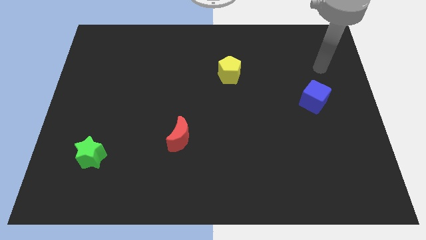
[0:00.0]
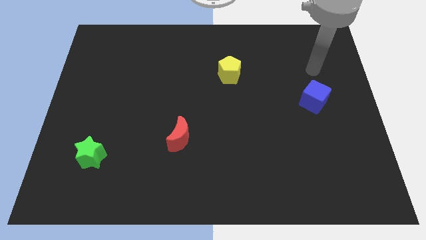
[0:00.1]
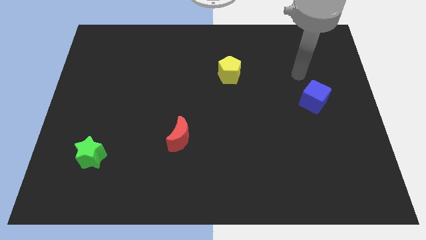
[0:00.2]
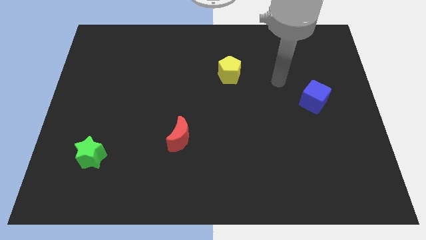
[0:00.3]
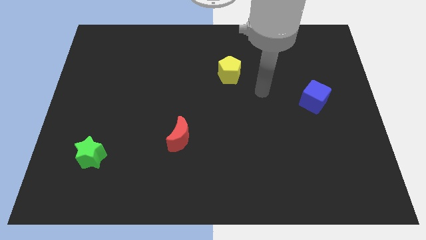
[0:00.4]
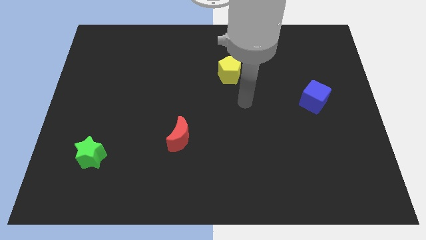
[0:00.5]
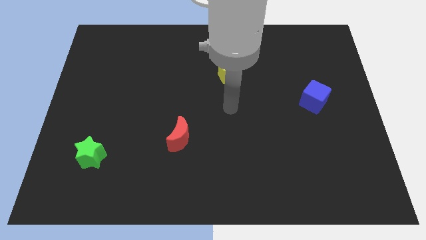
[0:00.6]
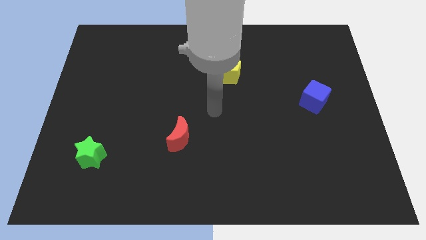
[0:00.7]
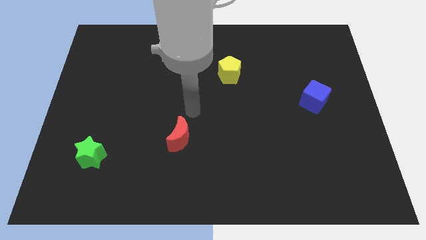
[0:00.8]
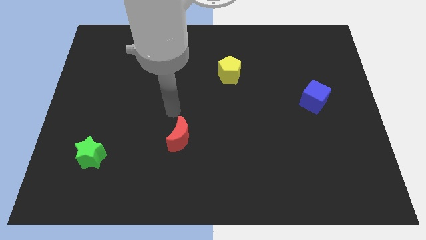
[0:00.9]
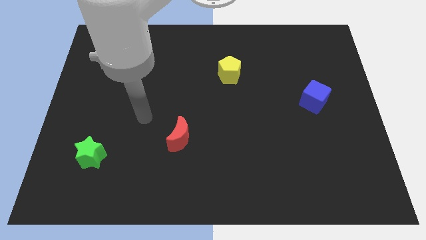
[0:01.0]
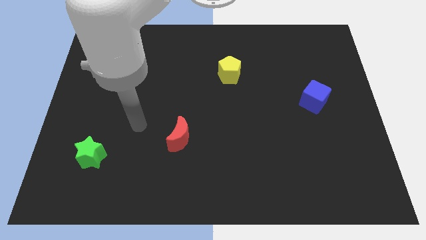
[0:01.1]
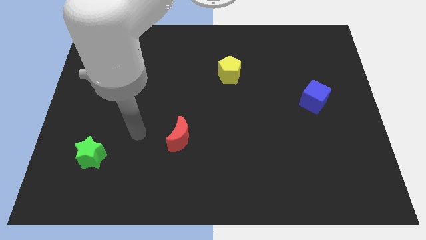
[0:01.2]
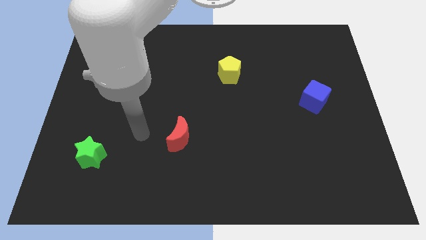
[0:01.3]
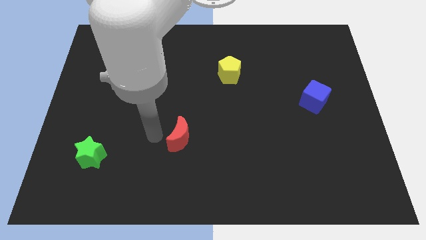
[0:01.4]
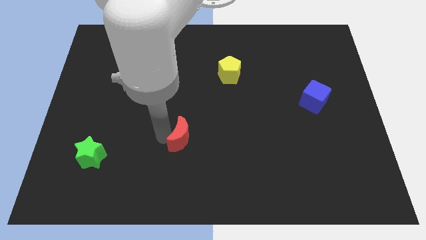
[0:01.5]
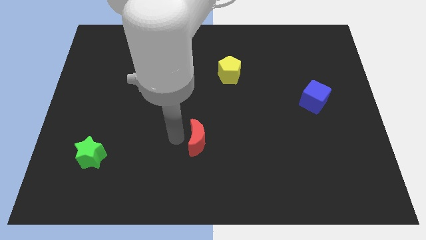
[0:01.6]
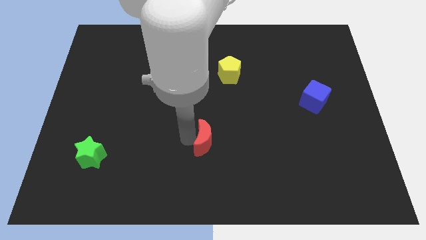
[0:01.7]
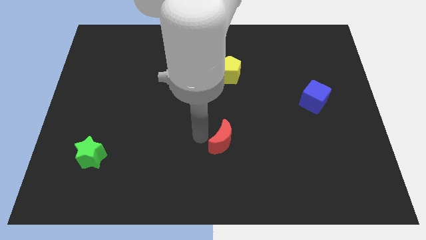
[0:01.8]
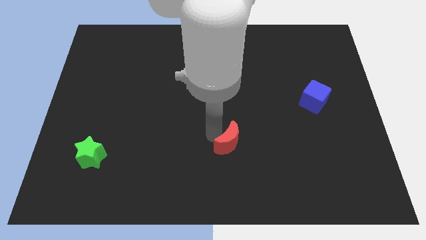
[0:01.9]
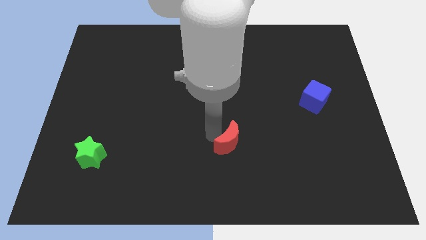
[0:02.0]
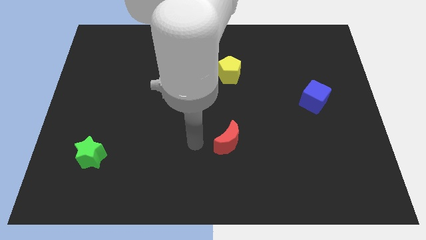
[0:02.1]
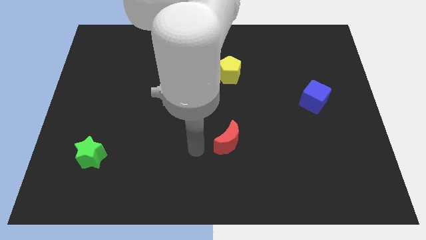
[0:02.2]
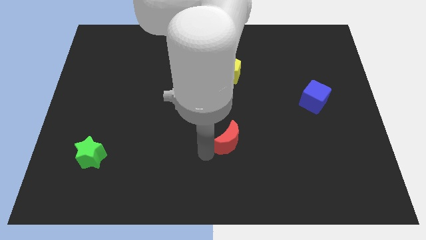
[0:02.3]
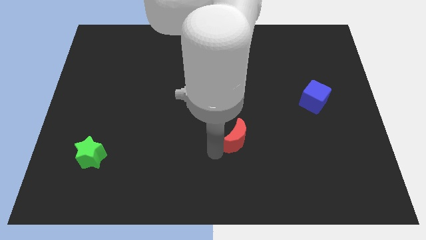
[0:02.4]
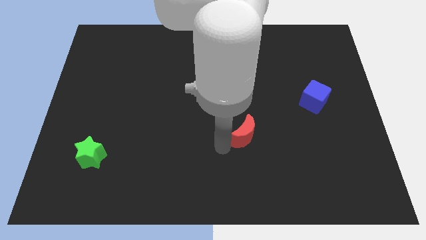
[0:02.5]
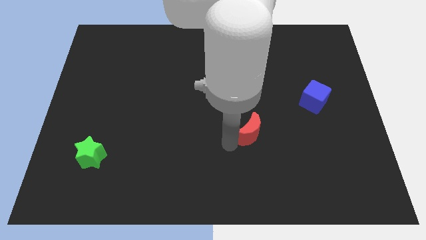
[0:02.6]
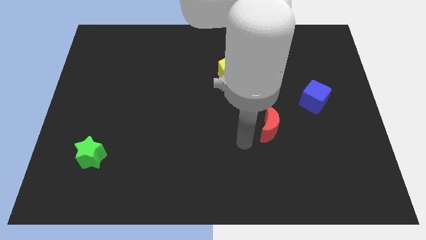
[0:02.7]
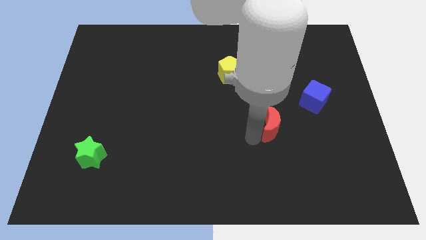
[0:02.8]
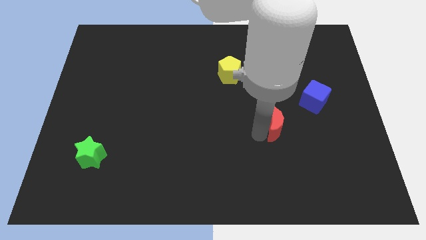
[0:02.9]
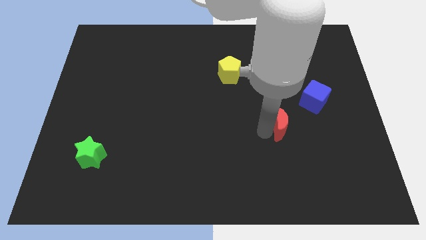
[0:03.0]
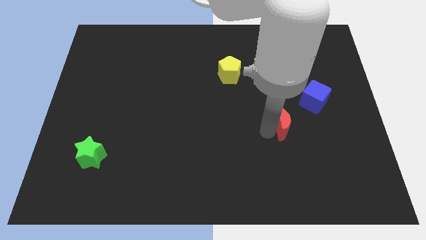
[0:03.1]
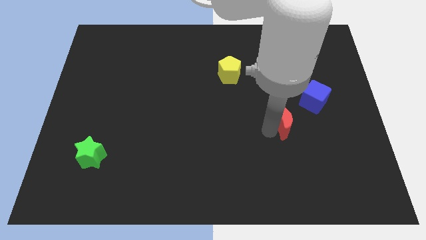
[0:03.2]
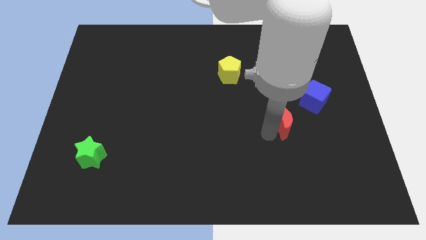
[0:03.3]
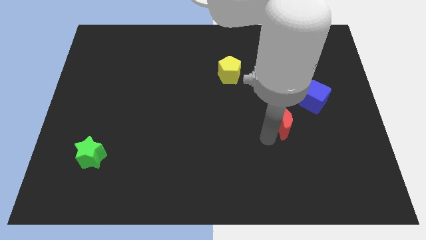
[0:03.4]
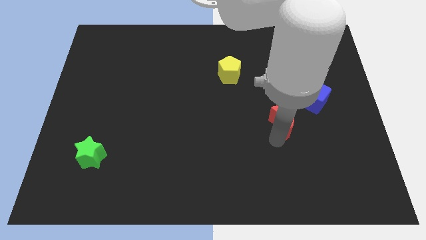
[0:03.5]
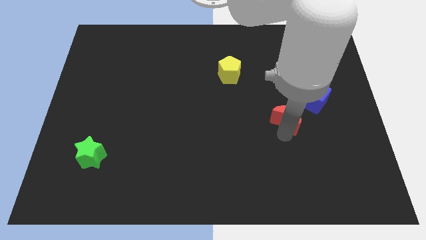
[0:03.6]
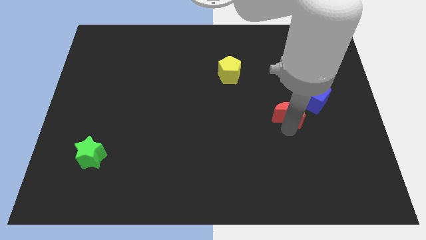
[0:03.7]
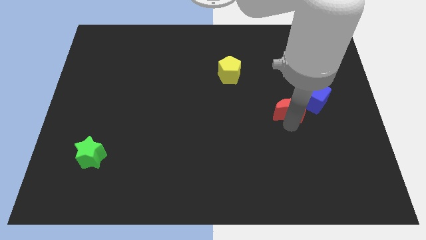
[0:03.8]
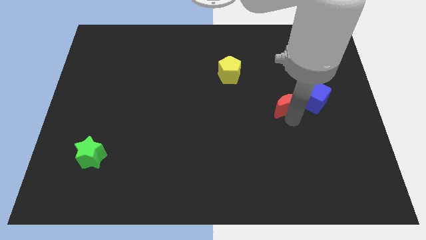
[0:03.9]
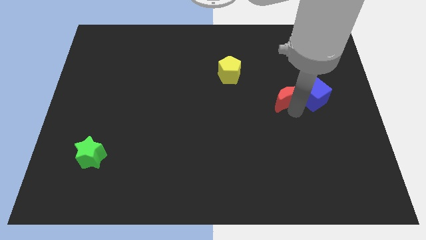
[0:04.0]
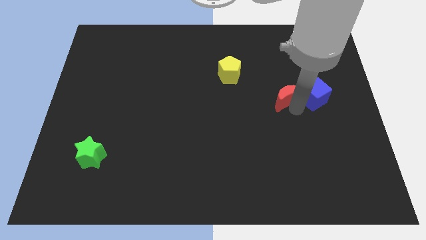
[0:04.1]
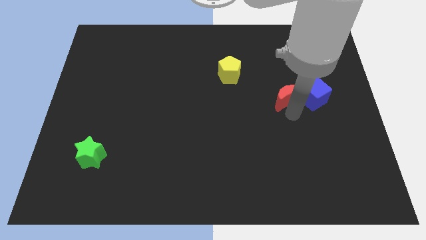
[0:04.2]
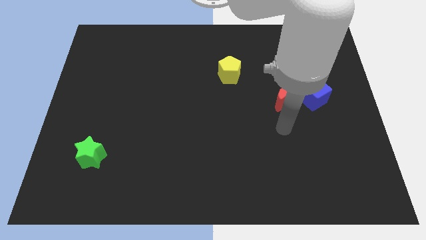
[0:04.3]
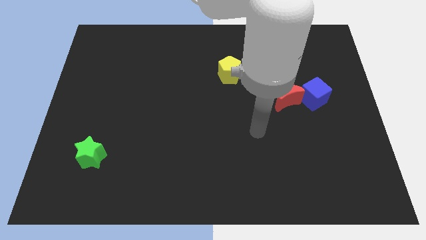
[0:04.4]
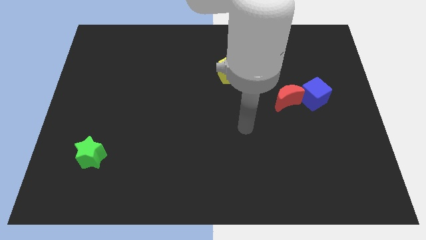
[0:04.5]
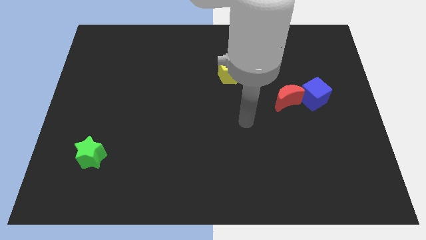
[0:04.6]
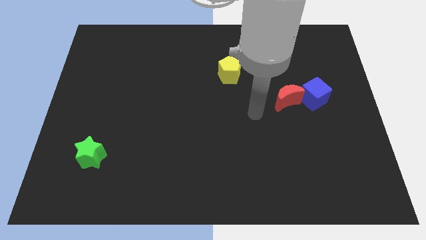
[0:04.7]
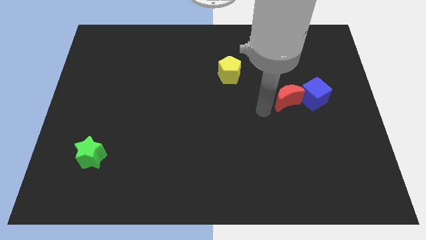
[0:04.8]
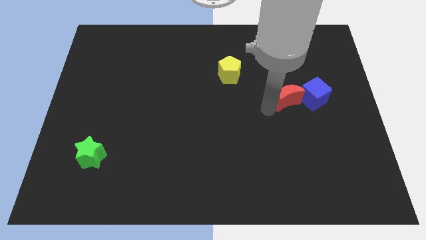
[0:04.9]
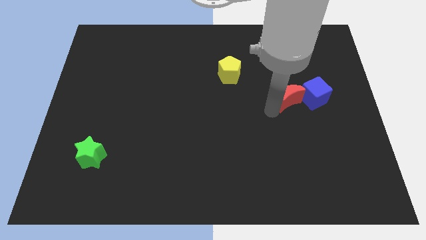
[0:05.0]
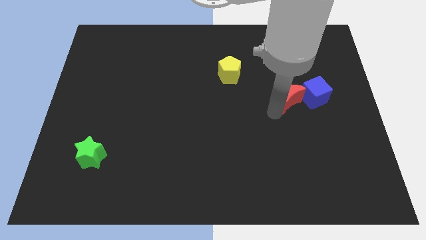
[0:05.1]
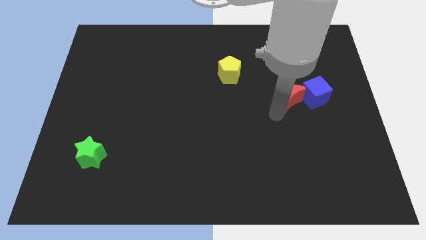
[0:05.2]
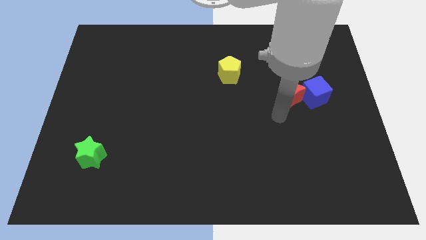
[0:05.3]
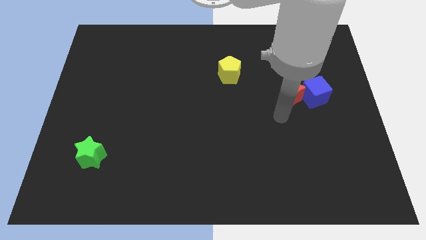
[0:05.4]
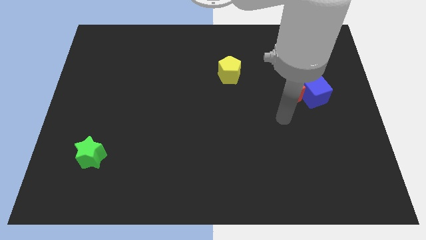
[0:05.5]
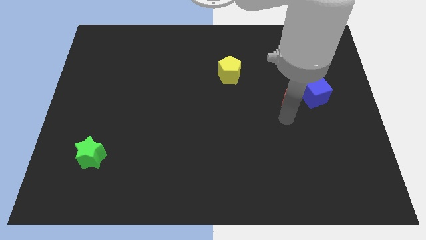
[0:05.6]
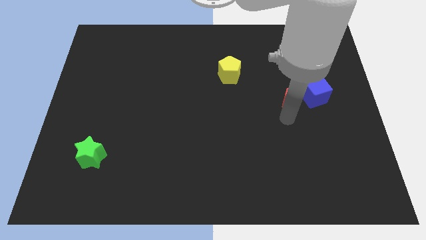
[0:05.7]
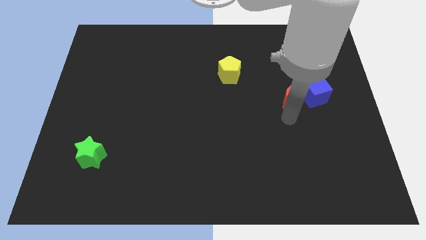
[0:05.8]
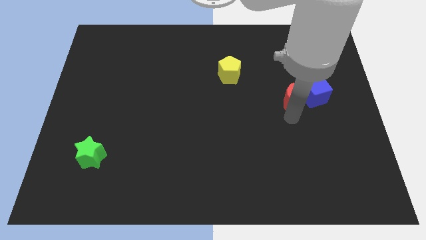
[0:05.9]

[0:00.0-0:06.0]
slide the red block close to the blue block

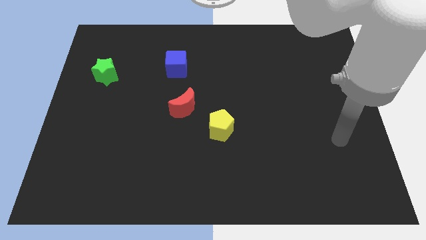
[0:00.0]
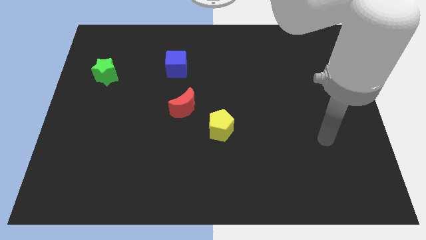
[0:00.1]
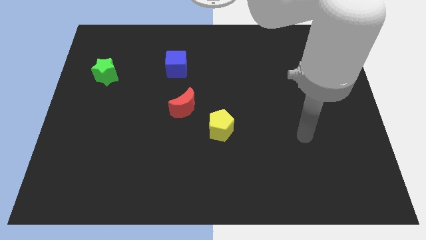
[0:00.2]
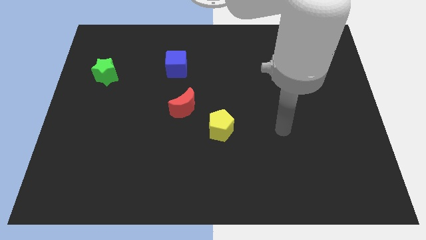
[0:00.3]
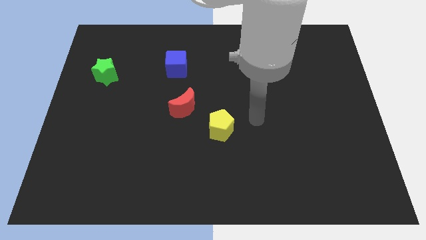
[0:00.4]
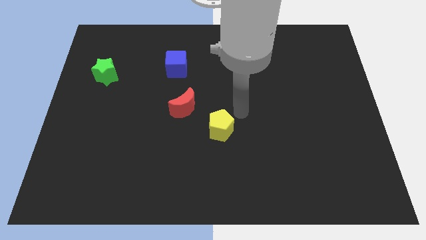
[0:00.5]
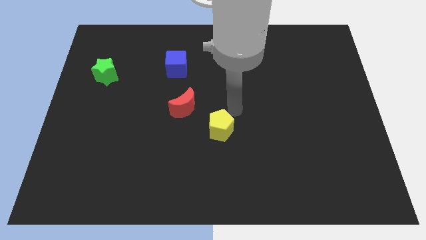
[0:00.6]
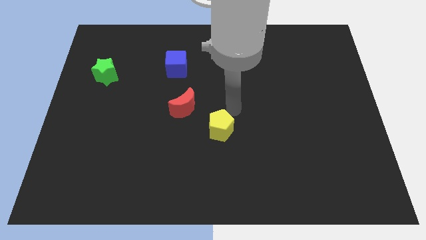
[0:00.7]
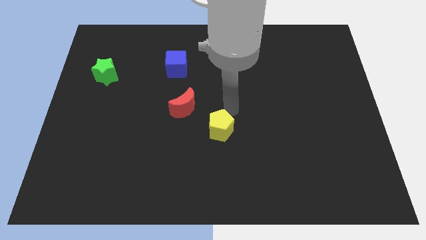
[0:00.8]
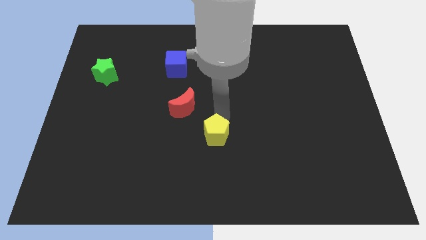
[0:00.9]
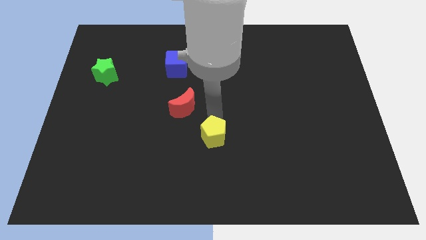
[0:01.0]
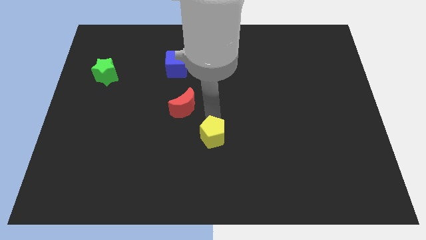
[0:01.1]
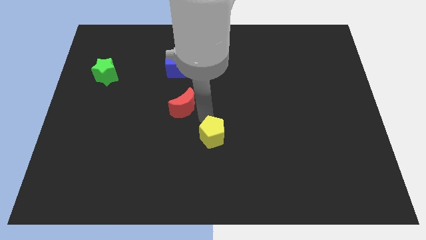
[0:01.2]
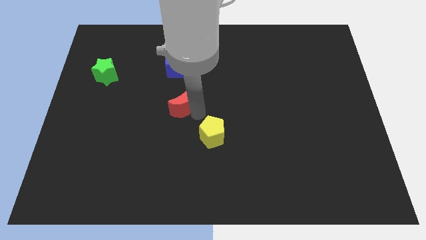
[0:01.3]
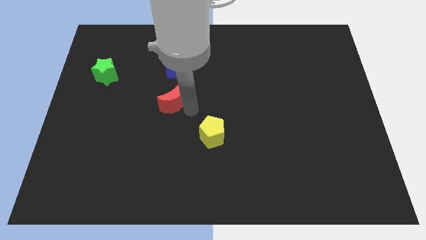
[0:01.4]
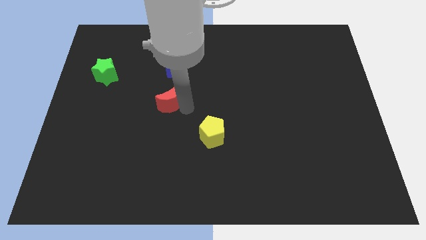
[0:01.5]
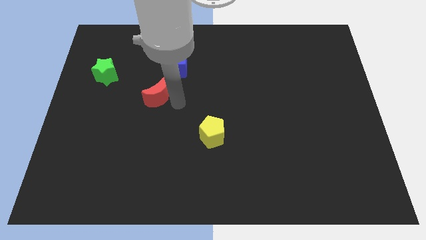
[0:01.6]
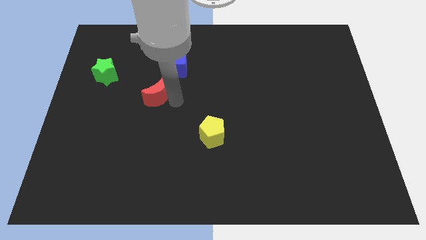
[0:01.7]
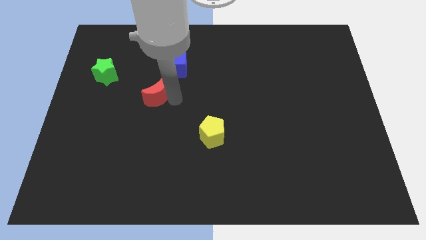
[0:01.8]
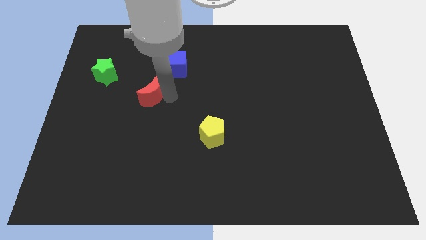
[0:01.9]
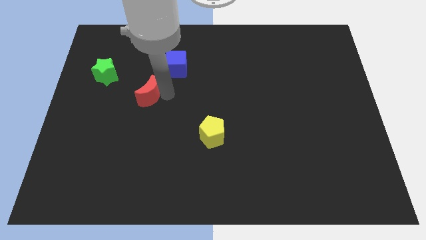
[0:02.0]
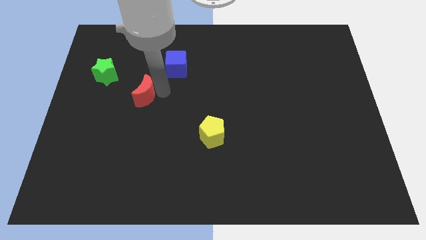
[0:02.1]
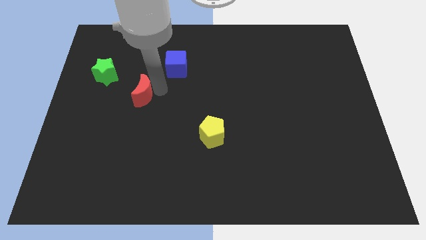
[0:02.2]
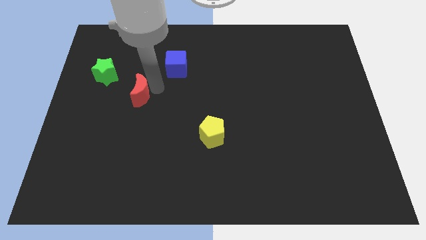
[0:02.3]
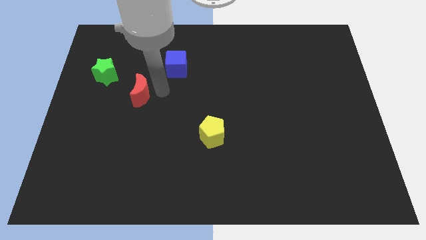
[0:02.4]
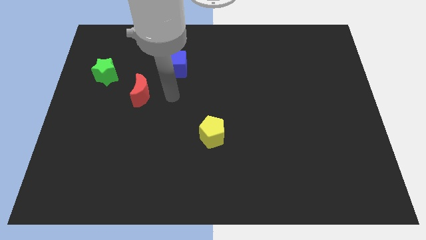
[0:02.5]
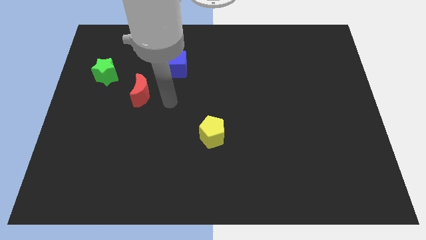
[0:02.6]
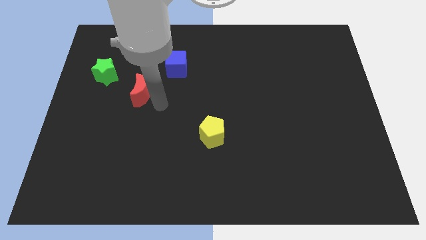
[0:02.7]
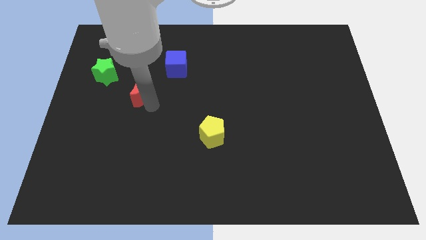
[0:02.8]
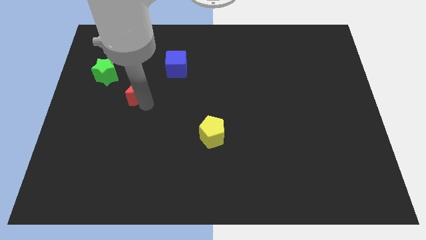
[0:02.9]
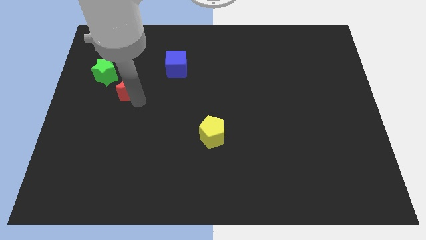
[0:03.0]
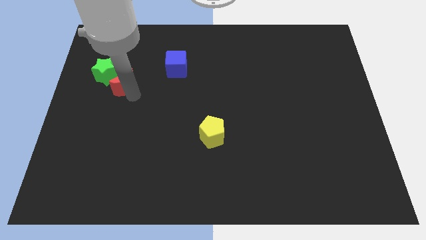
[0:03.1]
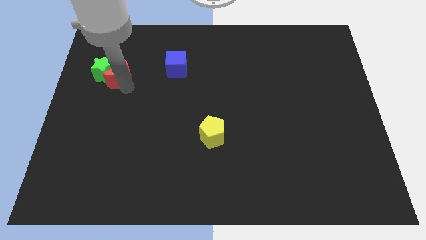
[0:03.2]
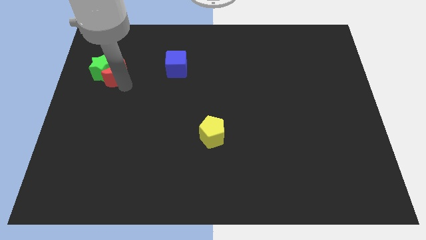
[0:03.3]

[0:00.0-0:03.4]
slide the moon towards the star
